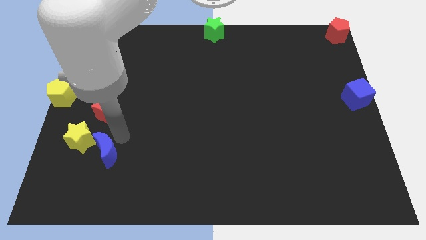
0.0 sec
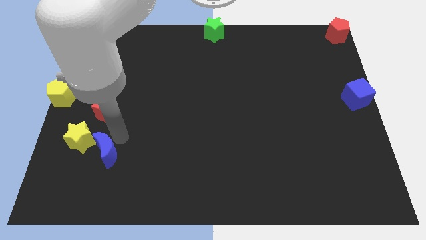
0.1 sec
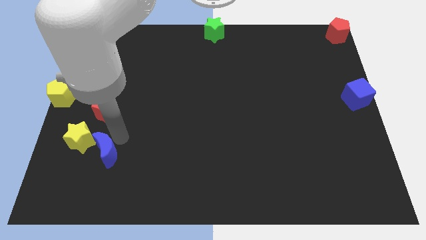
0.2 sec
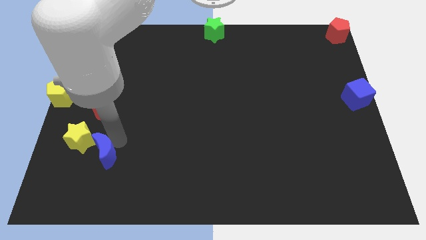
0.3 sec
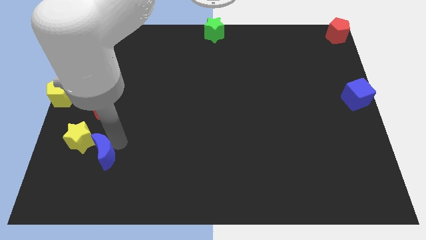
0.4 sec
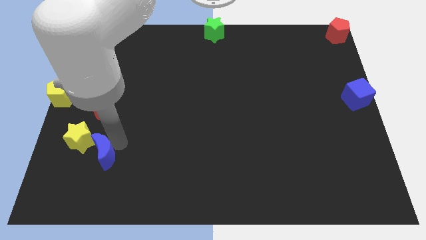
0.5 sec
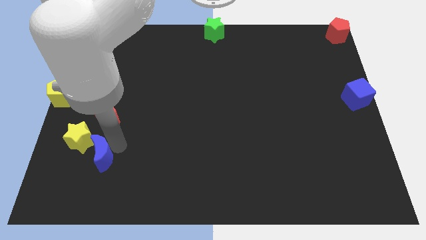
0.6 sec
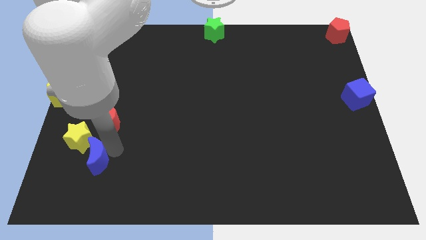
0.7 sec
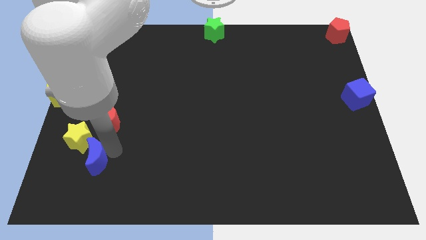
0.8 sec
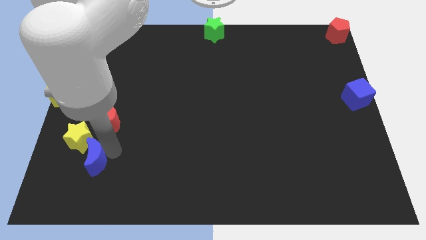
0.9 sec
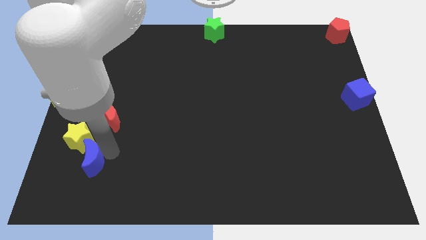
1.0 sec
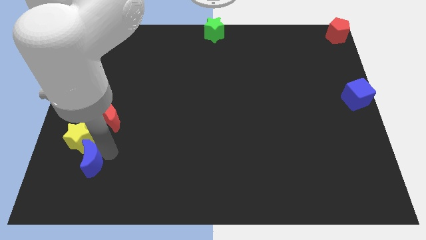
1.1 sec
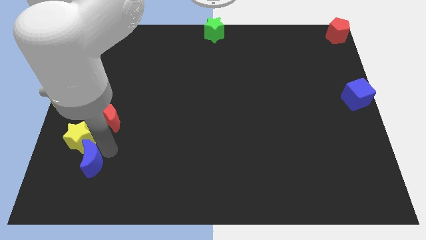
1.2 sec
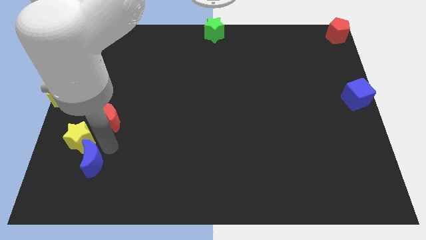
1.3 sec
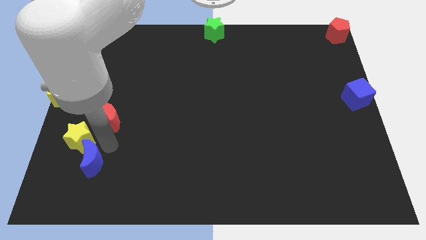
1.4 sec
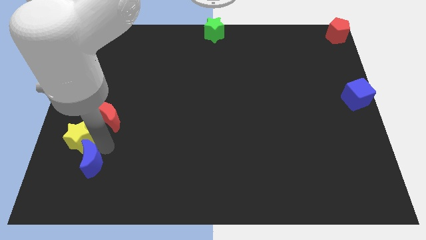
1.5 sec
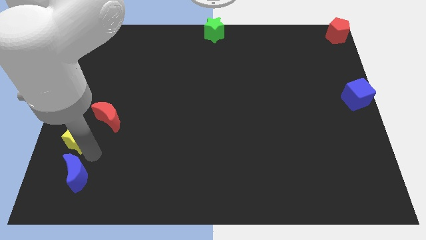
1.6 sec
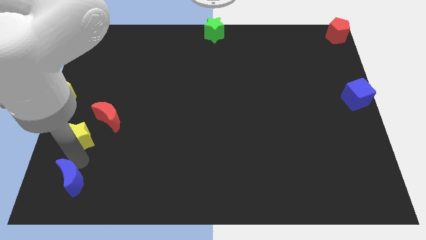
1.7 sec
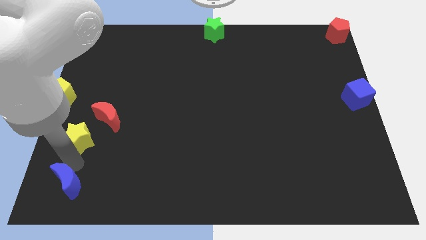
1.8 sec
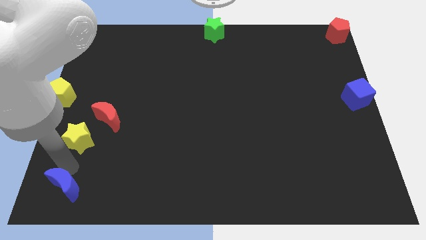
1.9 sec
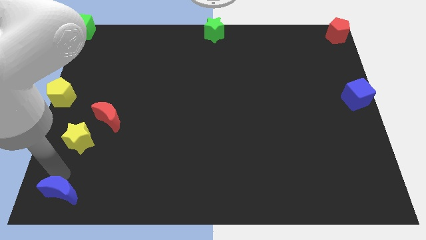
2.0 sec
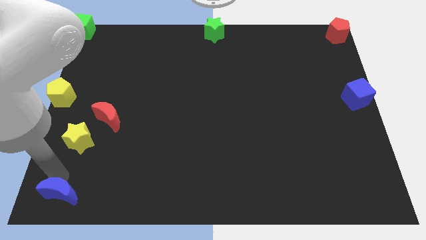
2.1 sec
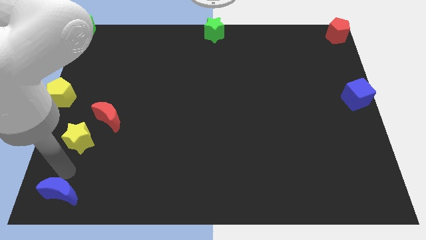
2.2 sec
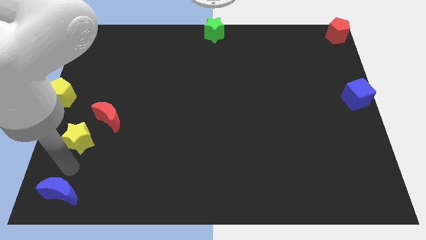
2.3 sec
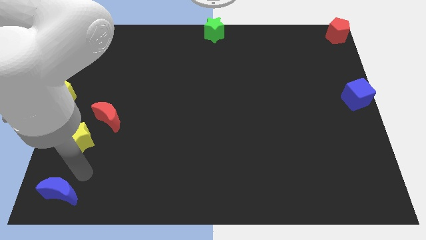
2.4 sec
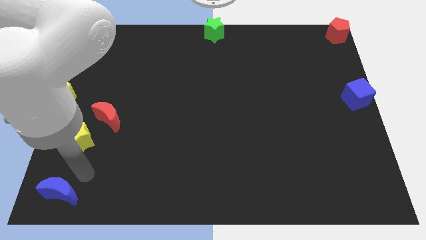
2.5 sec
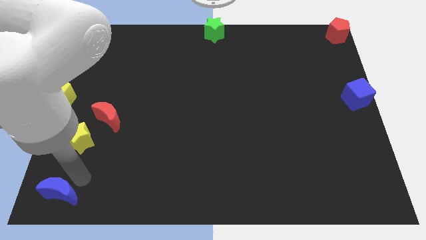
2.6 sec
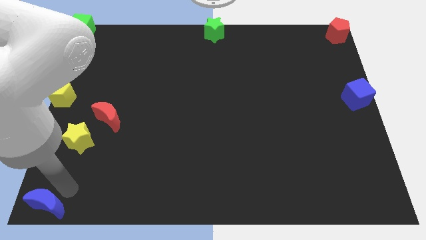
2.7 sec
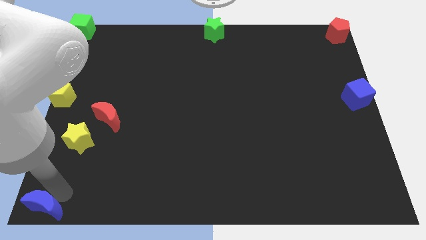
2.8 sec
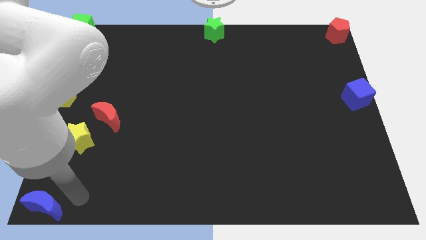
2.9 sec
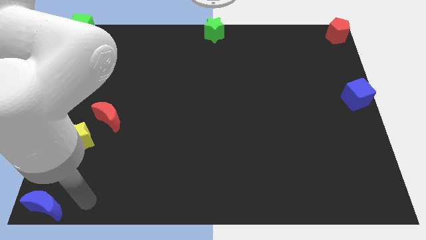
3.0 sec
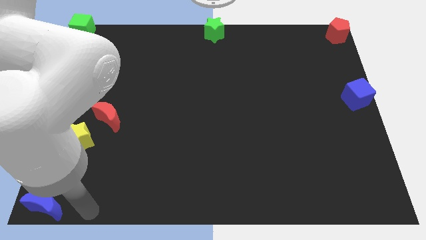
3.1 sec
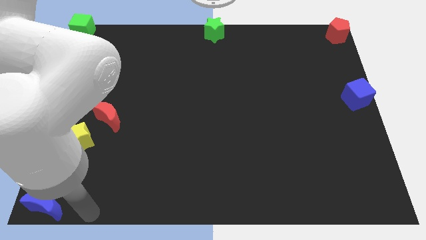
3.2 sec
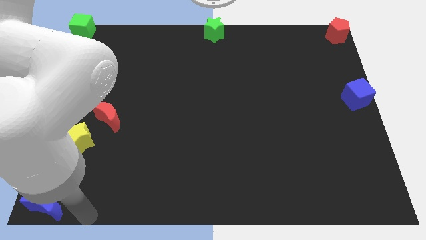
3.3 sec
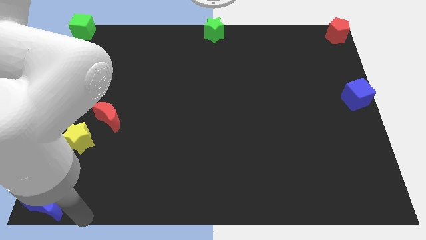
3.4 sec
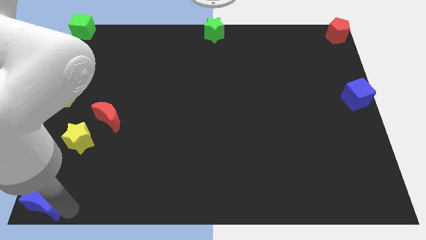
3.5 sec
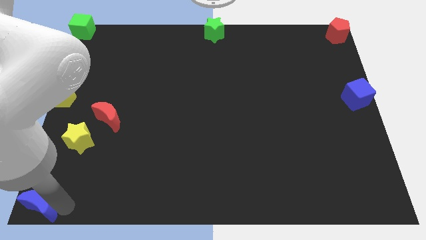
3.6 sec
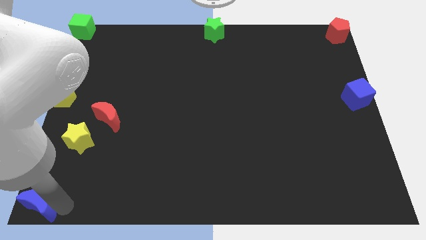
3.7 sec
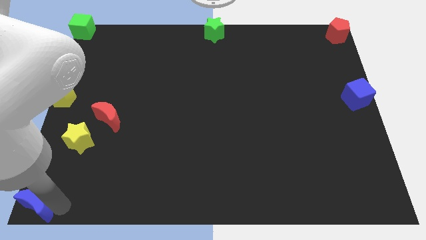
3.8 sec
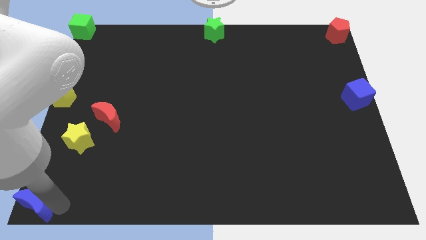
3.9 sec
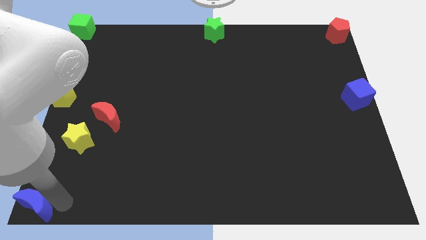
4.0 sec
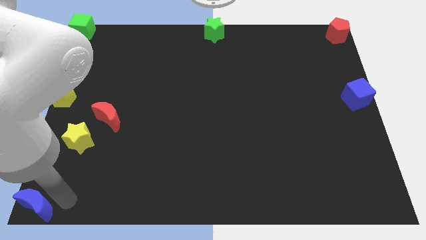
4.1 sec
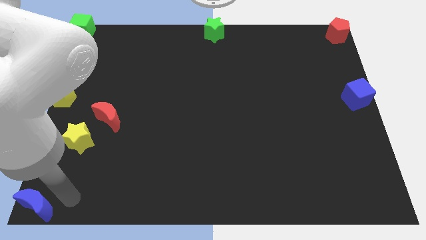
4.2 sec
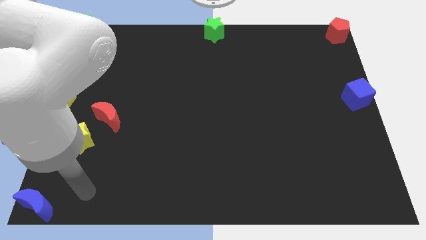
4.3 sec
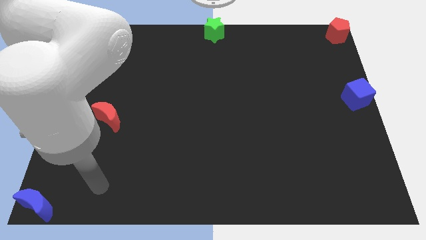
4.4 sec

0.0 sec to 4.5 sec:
place the blue crescent at bottom left side of the board

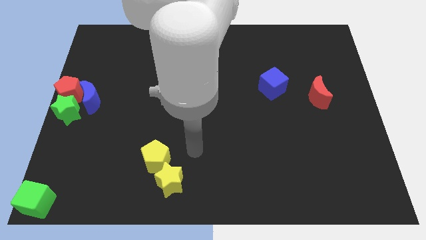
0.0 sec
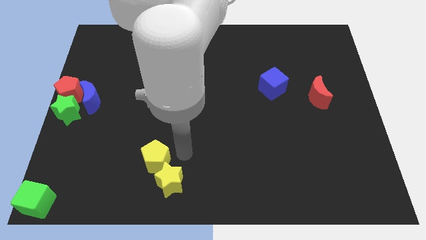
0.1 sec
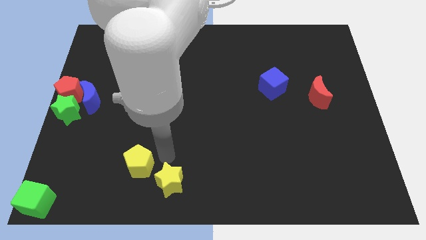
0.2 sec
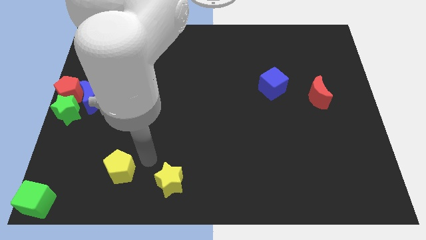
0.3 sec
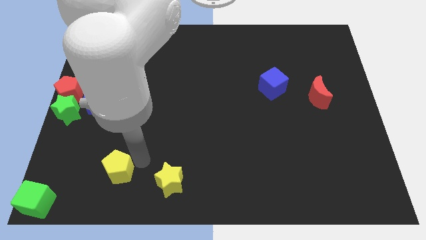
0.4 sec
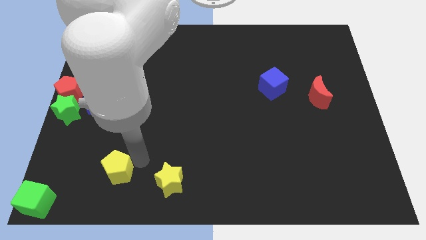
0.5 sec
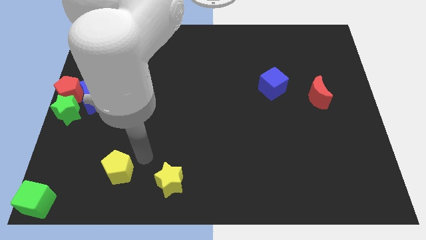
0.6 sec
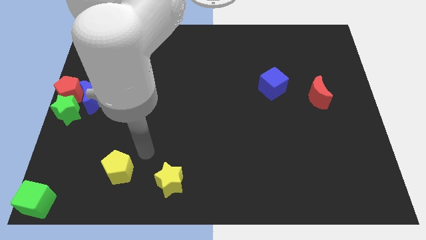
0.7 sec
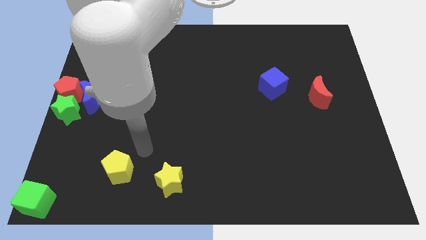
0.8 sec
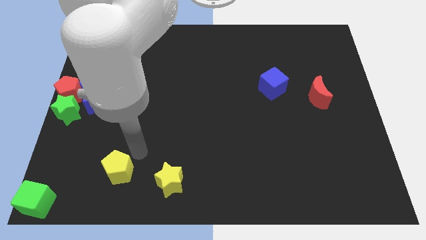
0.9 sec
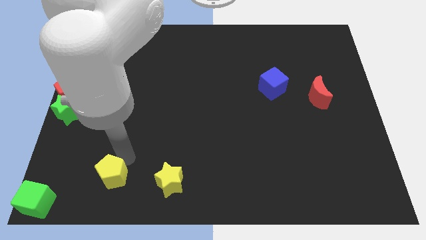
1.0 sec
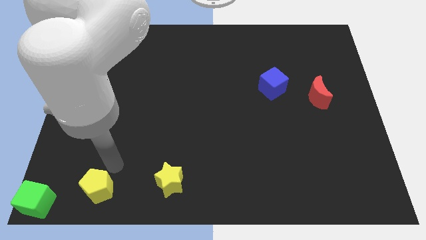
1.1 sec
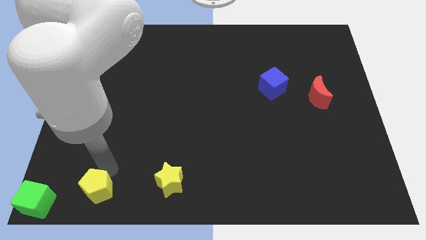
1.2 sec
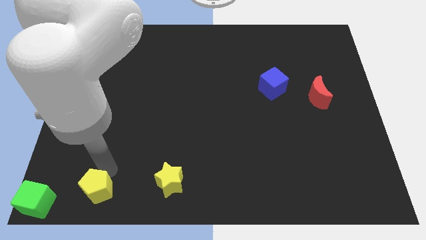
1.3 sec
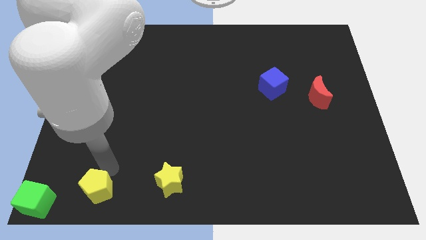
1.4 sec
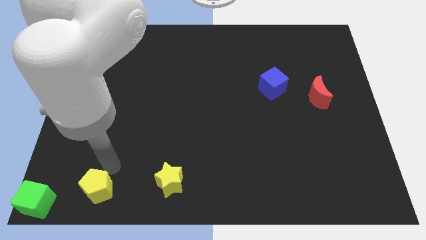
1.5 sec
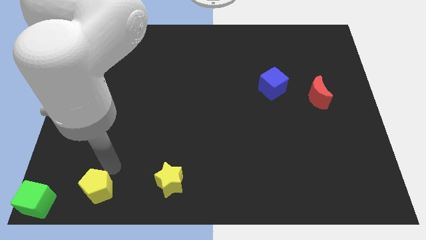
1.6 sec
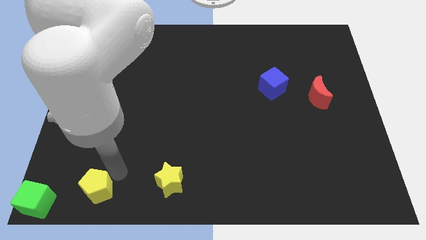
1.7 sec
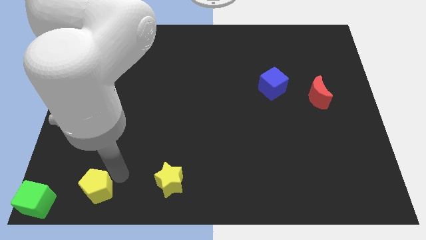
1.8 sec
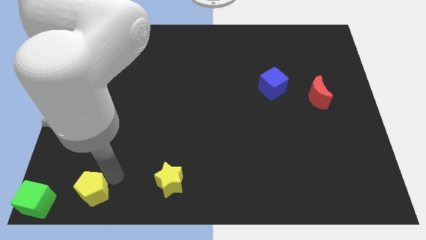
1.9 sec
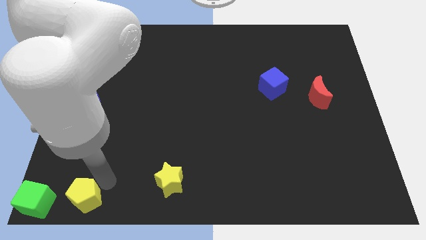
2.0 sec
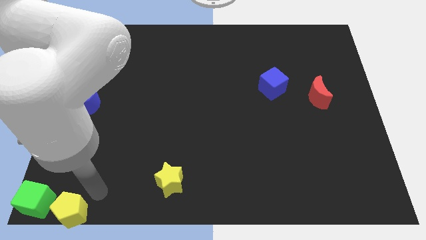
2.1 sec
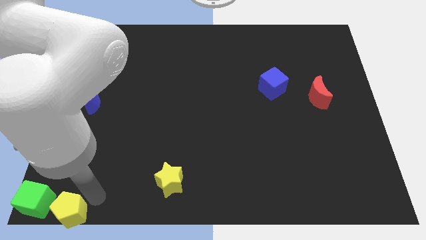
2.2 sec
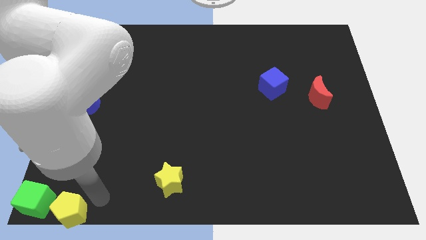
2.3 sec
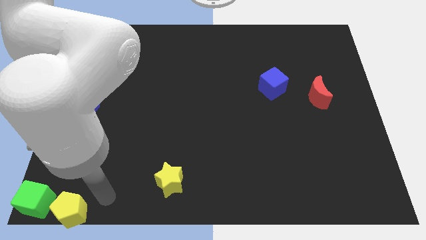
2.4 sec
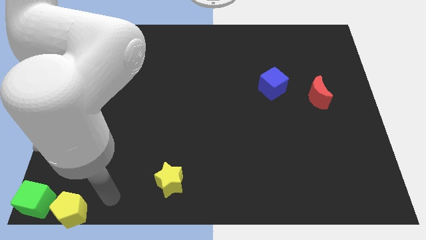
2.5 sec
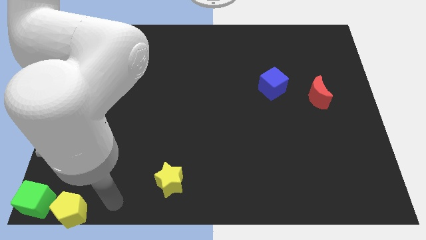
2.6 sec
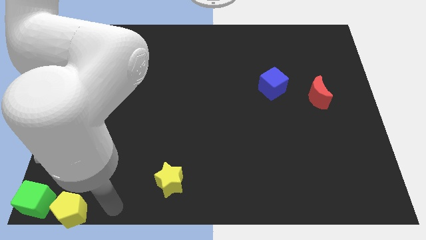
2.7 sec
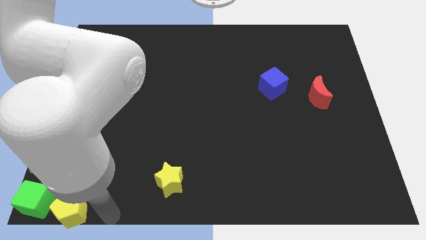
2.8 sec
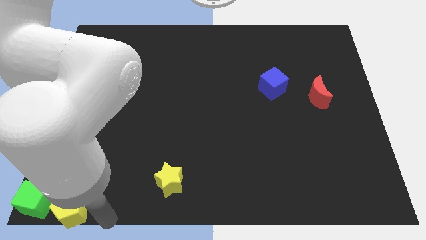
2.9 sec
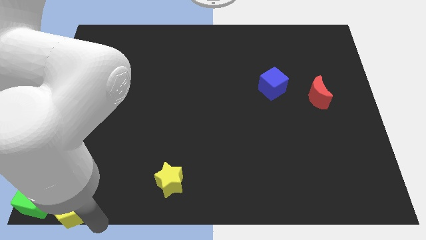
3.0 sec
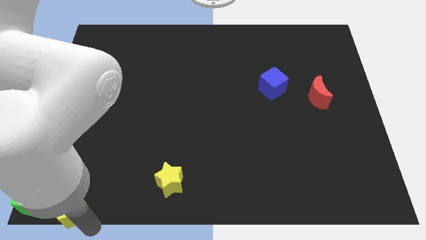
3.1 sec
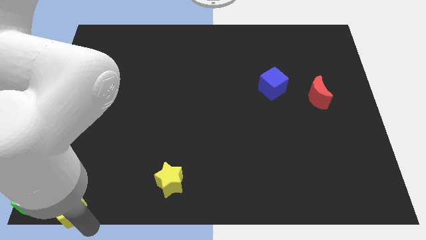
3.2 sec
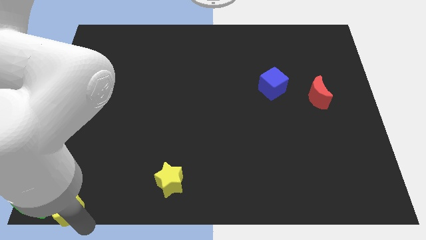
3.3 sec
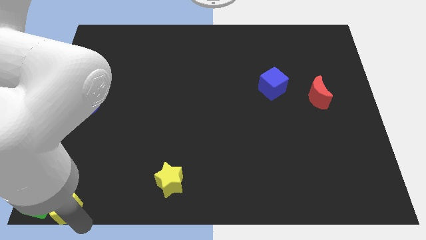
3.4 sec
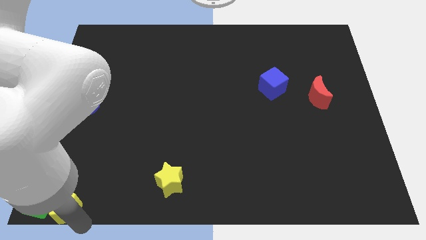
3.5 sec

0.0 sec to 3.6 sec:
push the yellow pentagon towards the right of the green cube

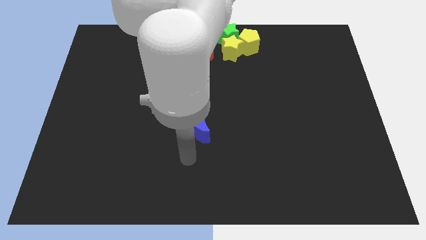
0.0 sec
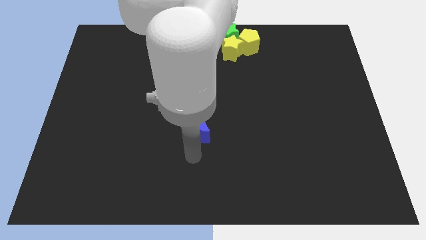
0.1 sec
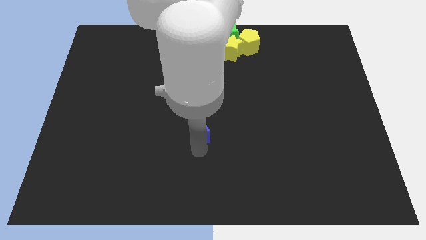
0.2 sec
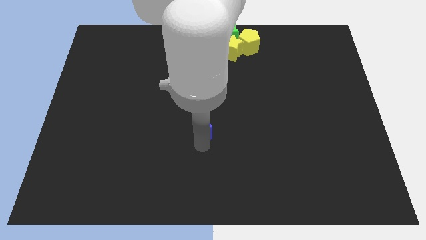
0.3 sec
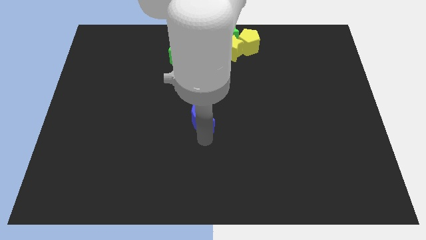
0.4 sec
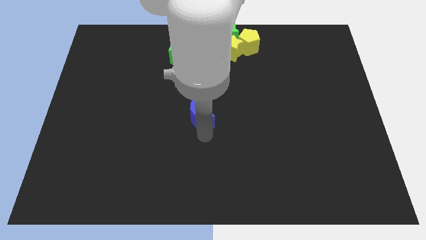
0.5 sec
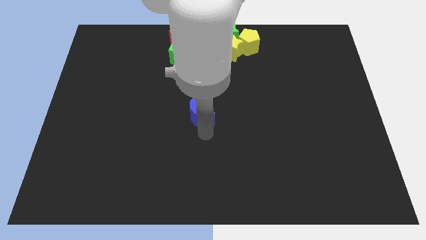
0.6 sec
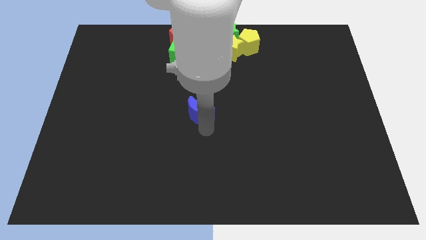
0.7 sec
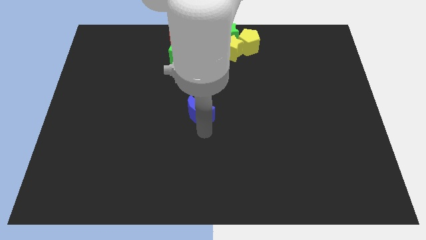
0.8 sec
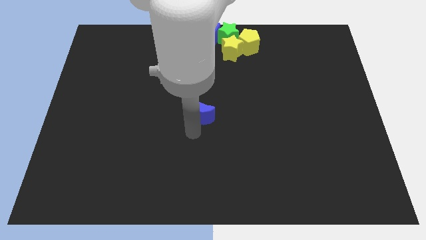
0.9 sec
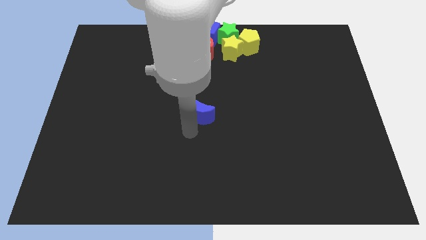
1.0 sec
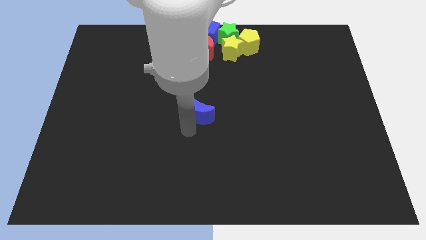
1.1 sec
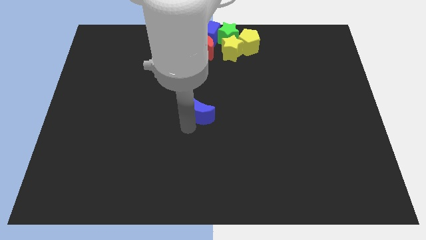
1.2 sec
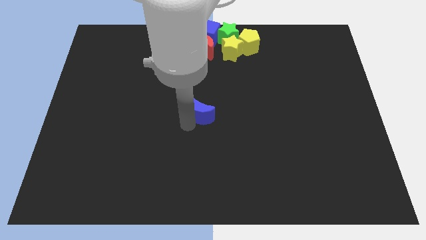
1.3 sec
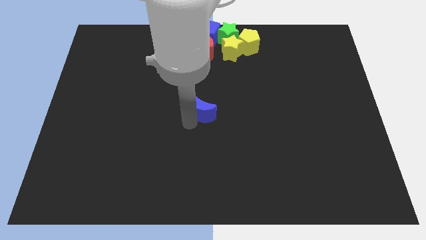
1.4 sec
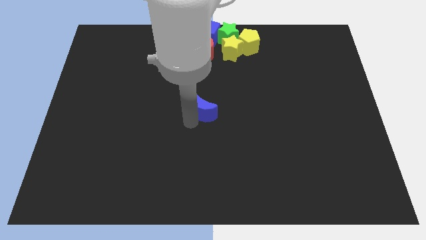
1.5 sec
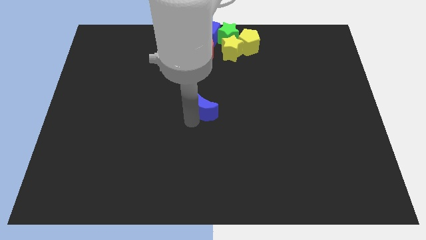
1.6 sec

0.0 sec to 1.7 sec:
place the blue crescent at the center of the board
